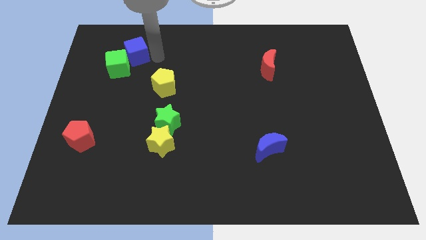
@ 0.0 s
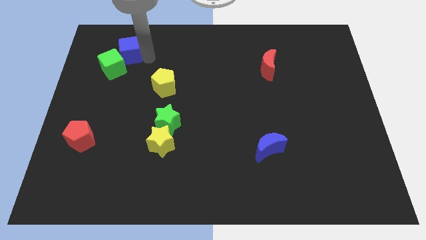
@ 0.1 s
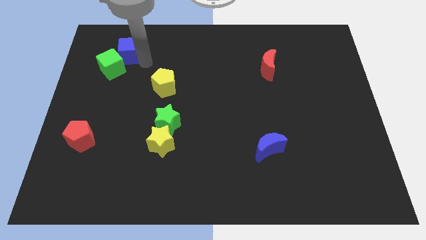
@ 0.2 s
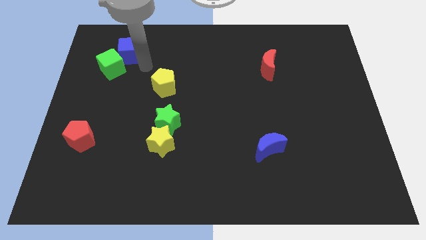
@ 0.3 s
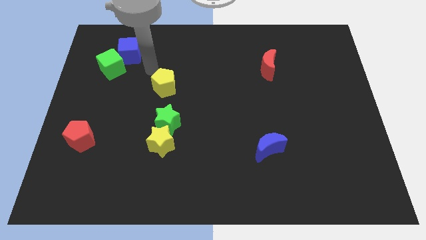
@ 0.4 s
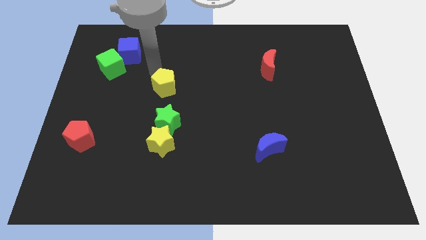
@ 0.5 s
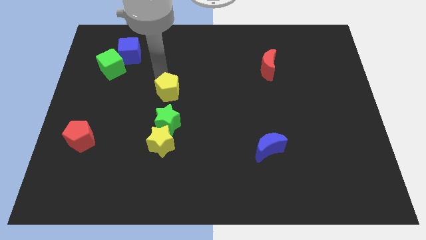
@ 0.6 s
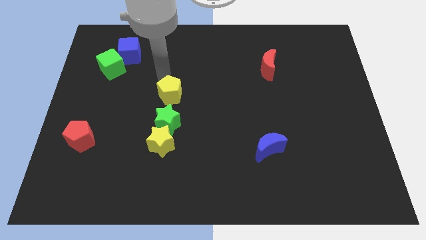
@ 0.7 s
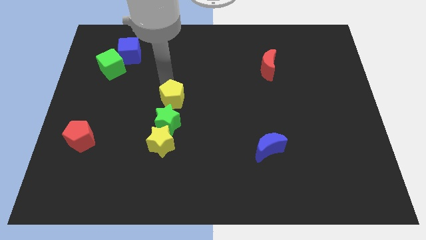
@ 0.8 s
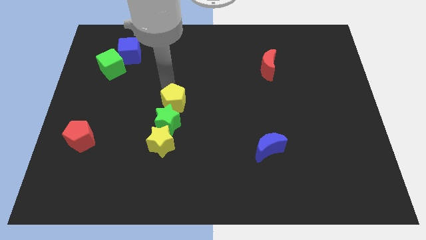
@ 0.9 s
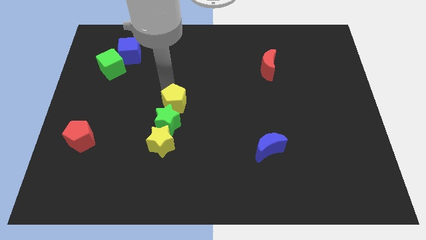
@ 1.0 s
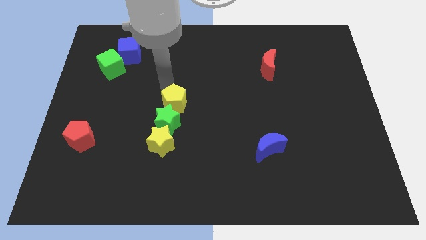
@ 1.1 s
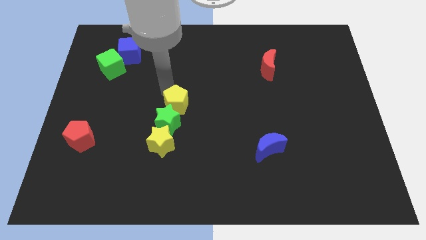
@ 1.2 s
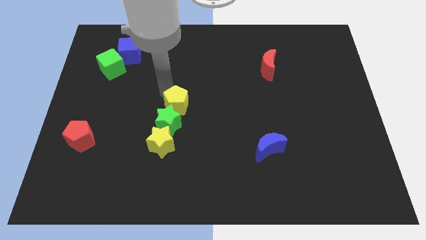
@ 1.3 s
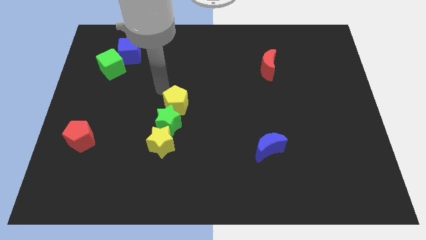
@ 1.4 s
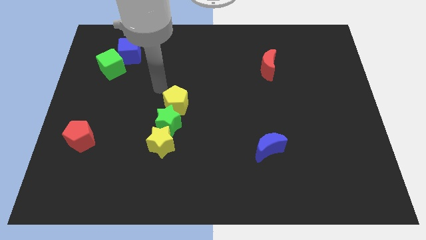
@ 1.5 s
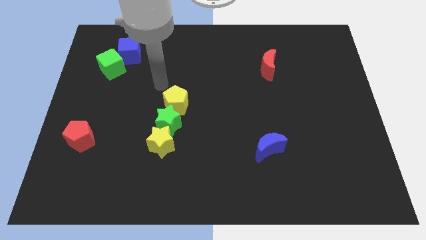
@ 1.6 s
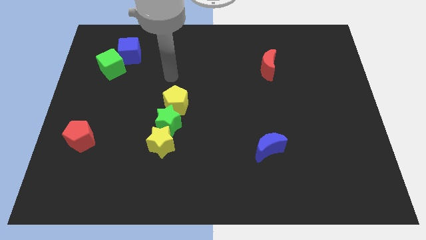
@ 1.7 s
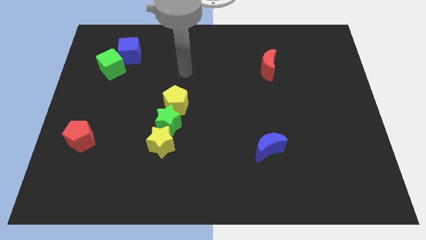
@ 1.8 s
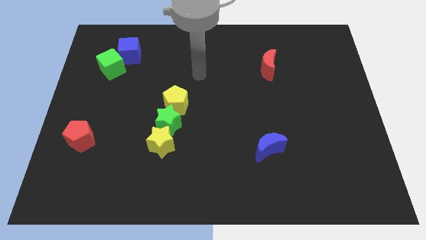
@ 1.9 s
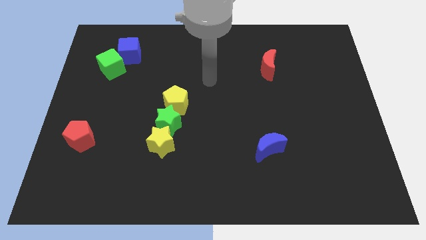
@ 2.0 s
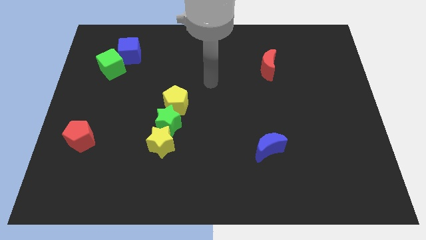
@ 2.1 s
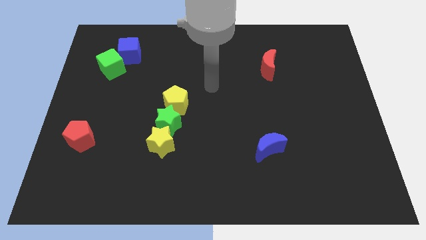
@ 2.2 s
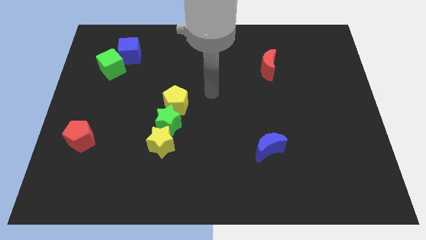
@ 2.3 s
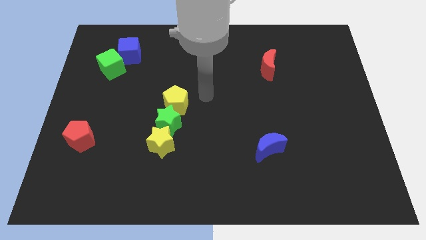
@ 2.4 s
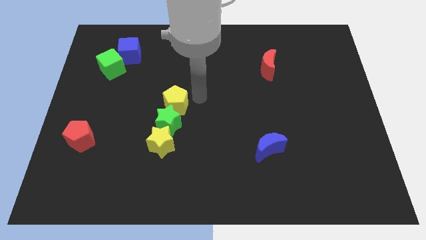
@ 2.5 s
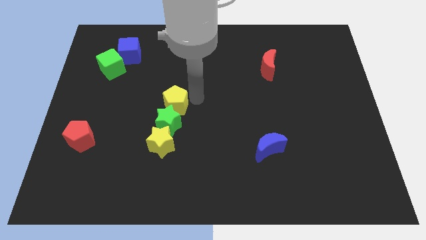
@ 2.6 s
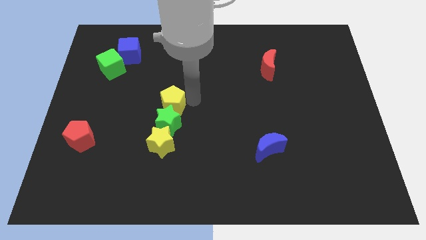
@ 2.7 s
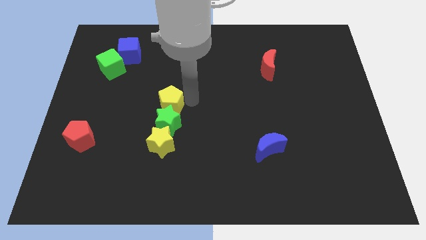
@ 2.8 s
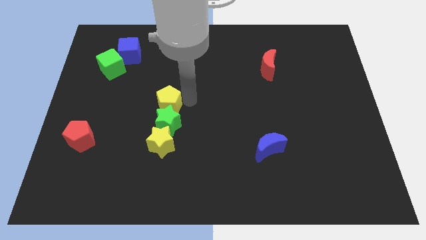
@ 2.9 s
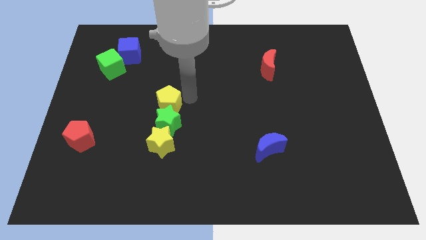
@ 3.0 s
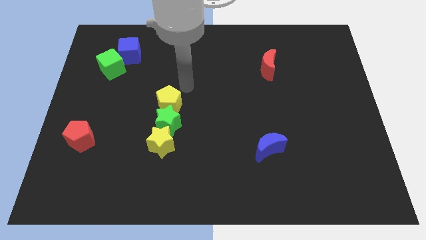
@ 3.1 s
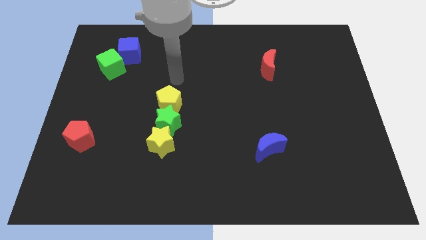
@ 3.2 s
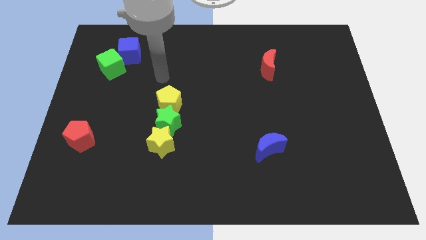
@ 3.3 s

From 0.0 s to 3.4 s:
push the yellow pentagon top of the green star

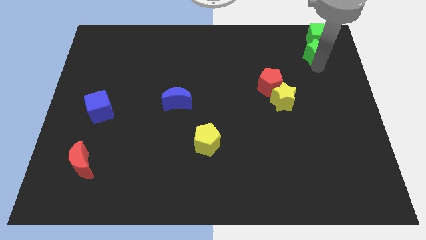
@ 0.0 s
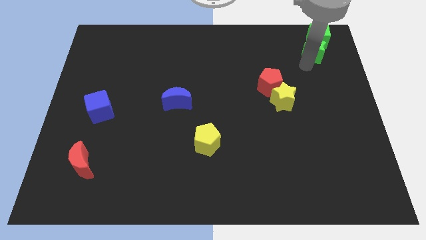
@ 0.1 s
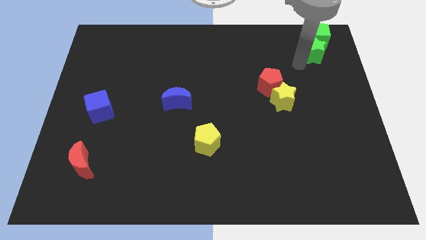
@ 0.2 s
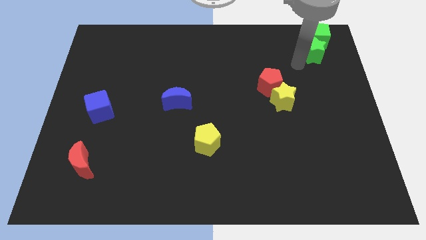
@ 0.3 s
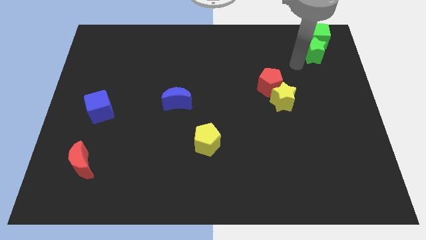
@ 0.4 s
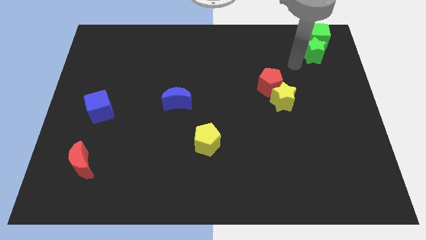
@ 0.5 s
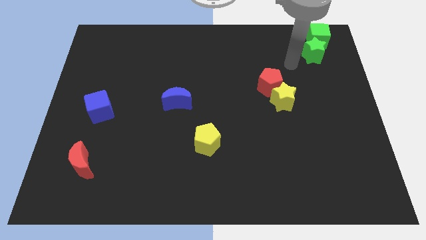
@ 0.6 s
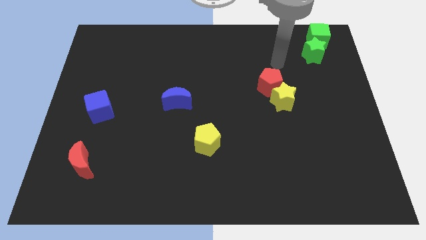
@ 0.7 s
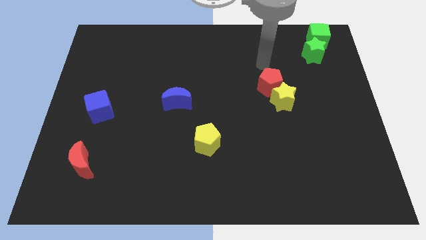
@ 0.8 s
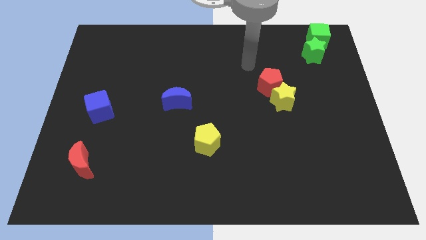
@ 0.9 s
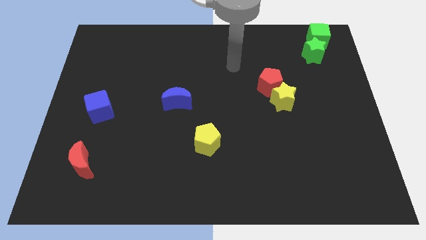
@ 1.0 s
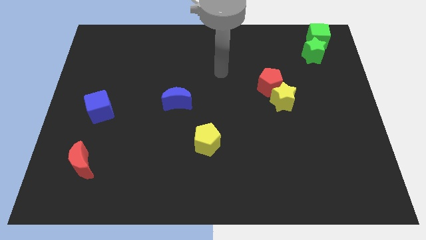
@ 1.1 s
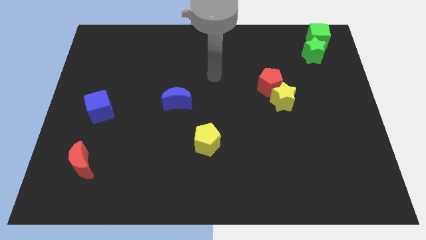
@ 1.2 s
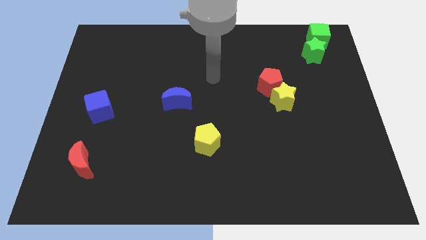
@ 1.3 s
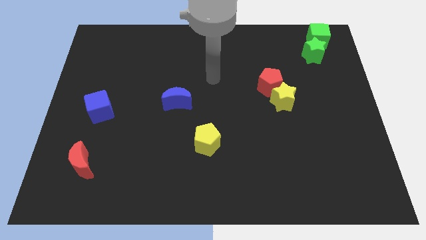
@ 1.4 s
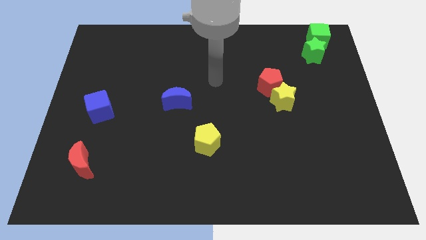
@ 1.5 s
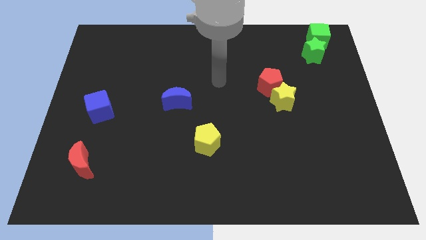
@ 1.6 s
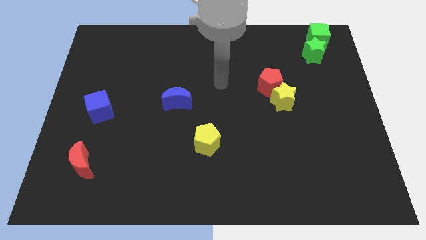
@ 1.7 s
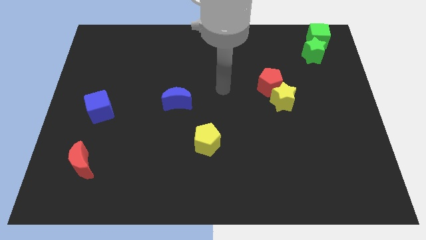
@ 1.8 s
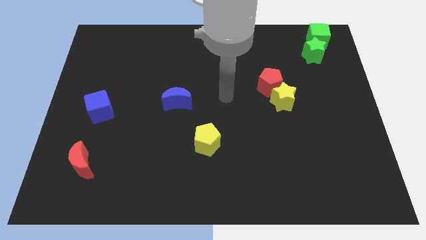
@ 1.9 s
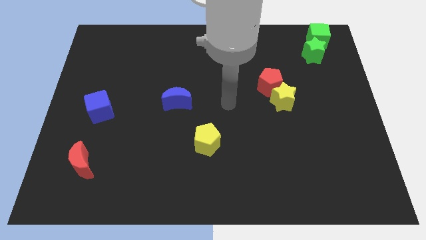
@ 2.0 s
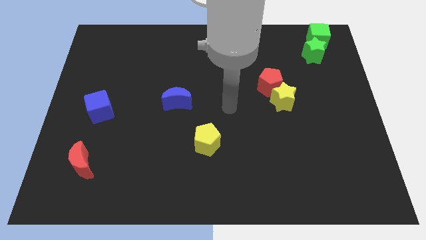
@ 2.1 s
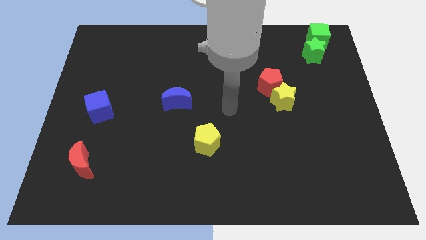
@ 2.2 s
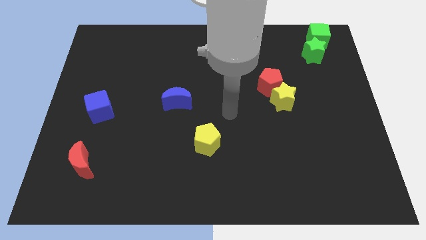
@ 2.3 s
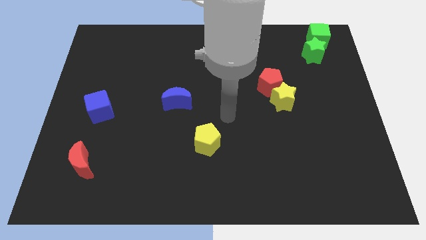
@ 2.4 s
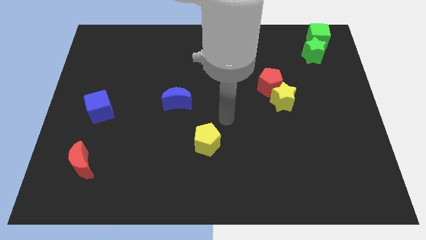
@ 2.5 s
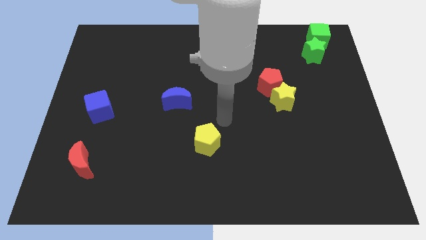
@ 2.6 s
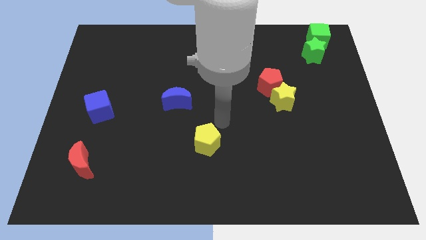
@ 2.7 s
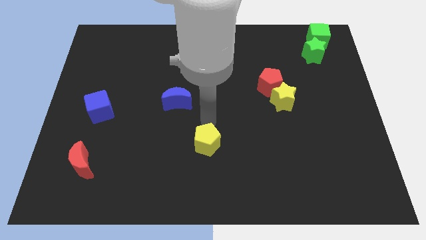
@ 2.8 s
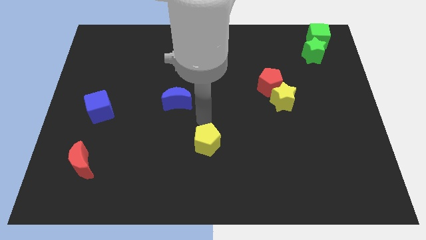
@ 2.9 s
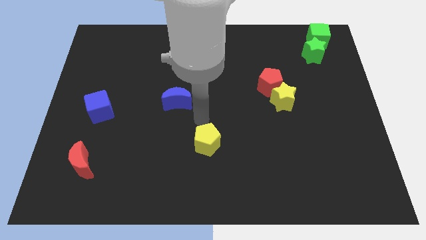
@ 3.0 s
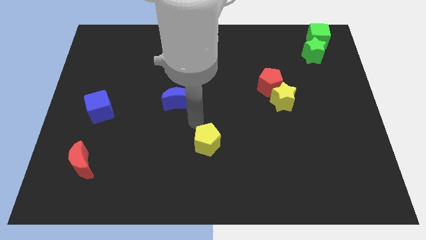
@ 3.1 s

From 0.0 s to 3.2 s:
move the arm above the yellow pentagon

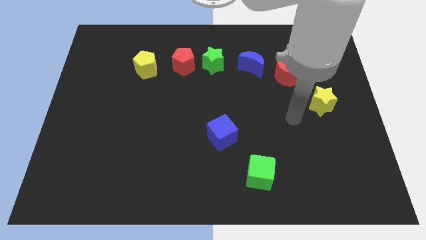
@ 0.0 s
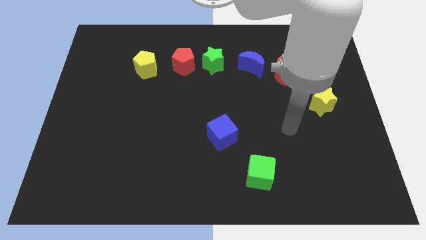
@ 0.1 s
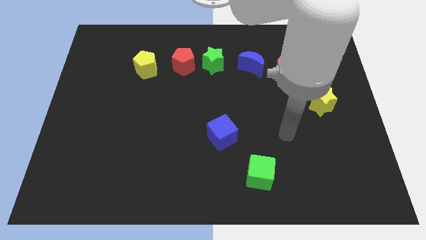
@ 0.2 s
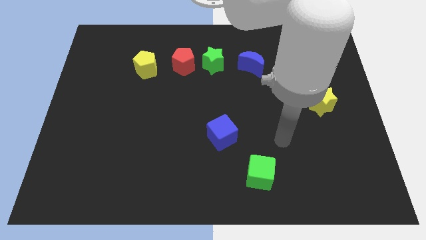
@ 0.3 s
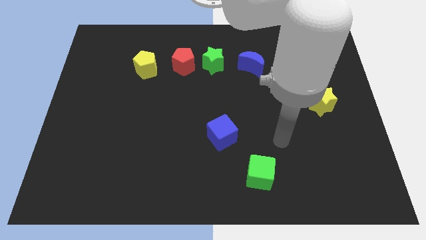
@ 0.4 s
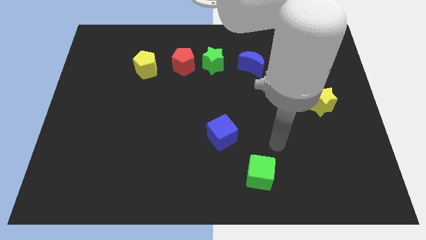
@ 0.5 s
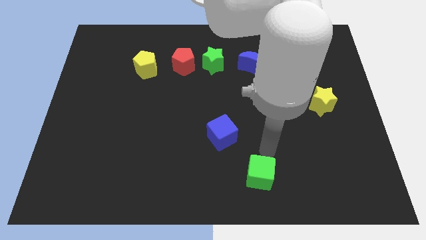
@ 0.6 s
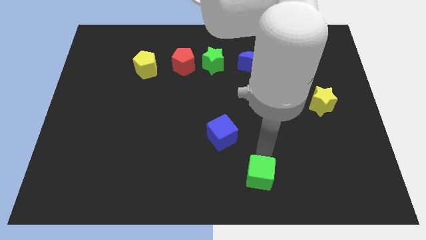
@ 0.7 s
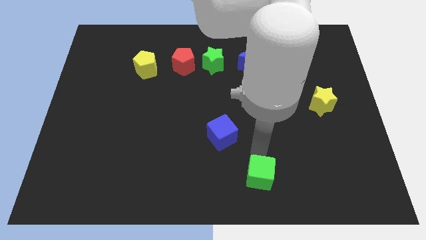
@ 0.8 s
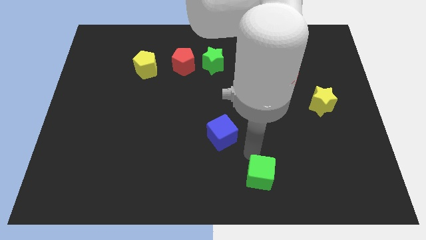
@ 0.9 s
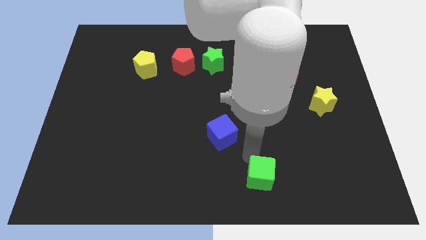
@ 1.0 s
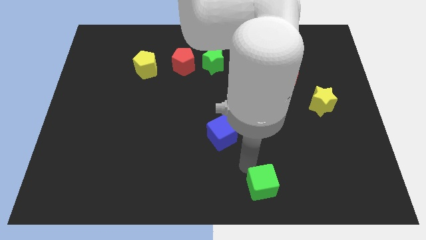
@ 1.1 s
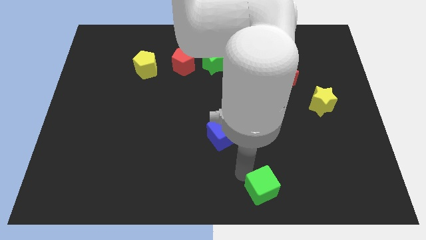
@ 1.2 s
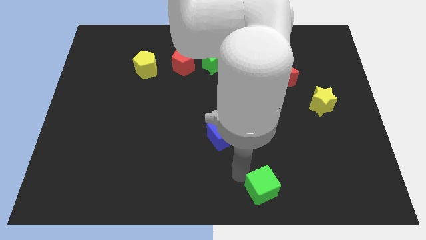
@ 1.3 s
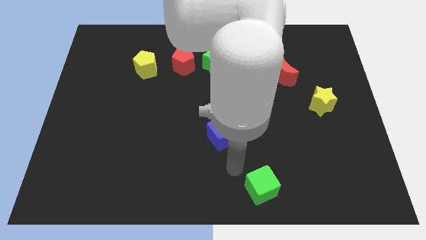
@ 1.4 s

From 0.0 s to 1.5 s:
slightly push the green cube to the bottom side

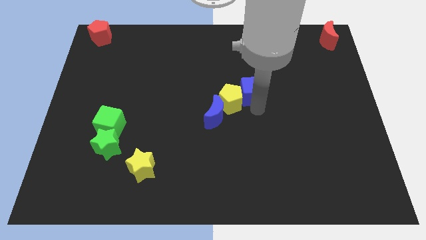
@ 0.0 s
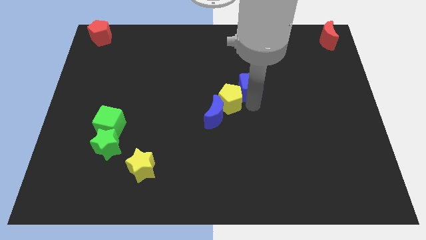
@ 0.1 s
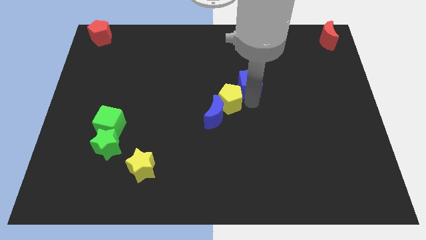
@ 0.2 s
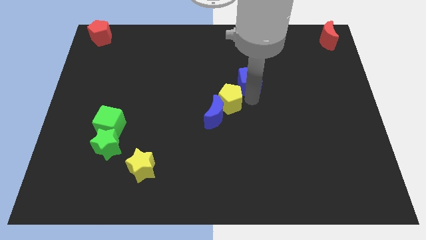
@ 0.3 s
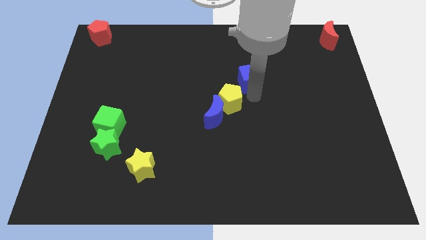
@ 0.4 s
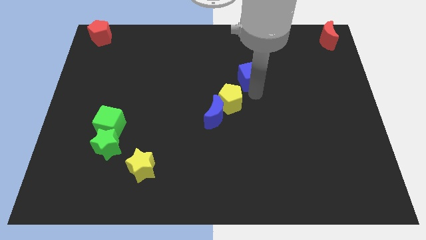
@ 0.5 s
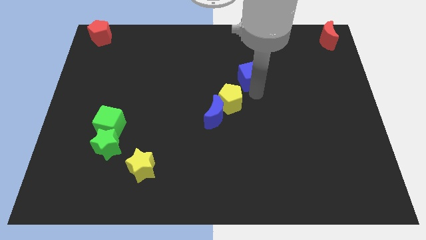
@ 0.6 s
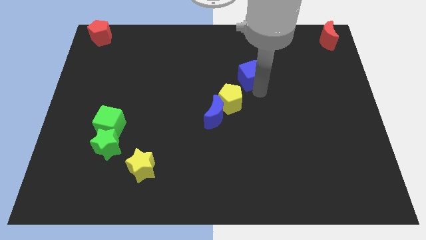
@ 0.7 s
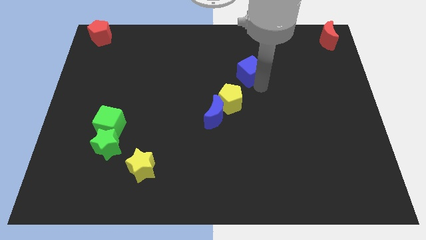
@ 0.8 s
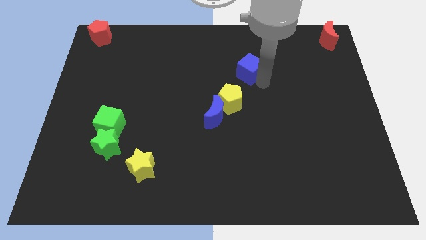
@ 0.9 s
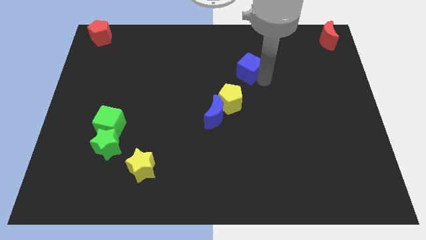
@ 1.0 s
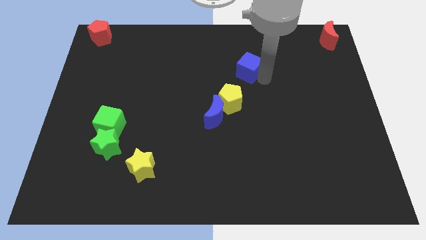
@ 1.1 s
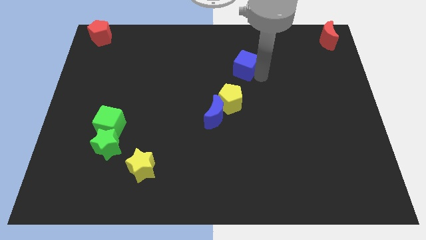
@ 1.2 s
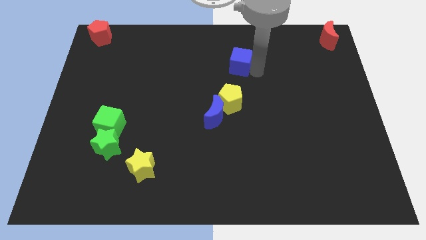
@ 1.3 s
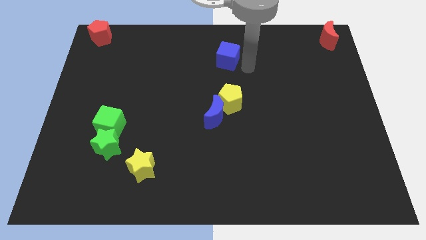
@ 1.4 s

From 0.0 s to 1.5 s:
move the blue cube to the top of the yellow pentagon
